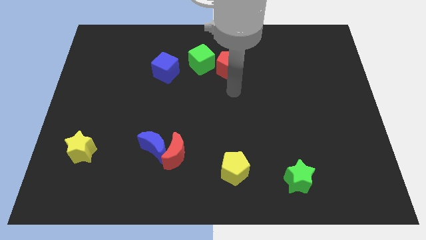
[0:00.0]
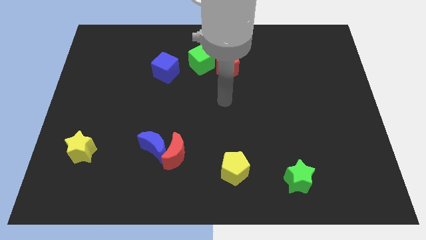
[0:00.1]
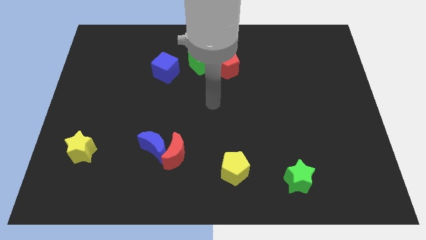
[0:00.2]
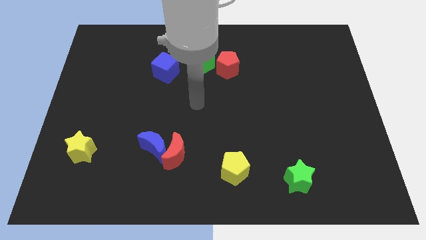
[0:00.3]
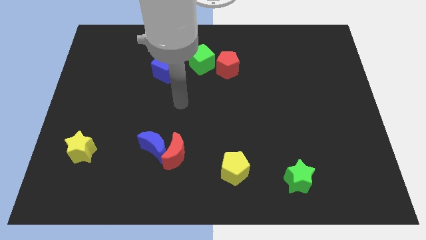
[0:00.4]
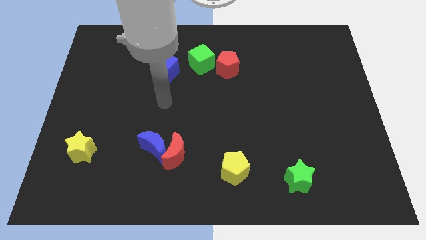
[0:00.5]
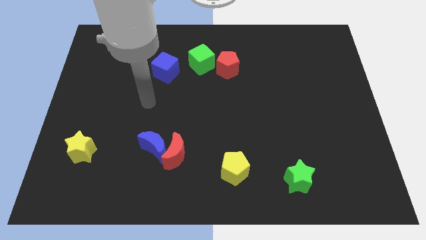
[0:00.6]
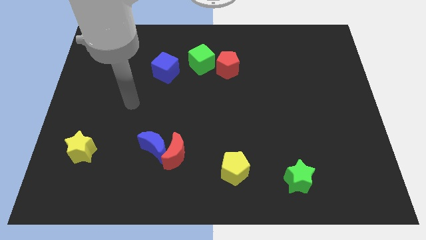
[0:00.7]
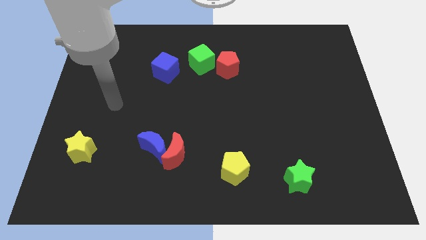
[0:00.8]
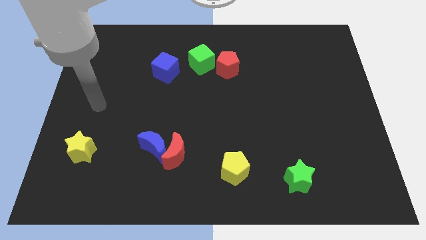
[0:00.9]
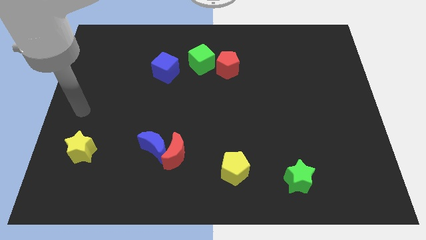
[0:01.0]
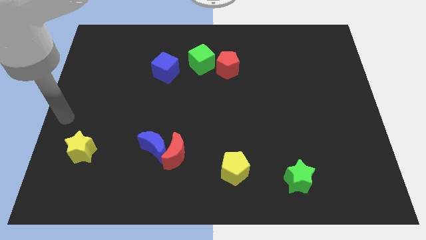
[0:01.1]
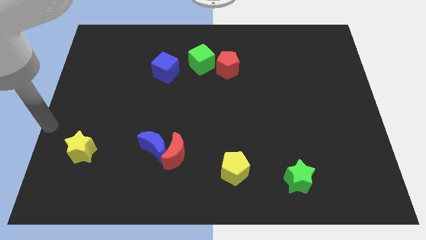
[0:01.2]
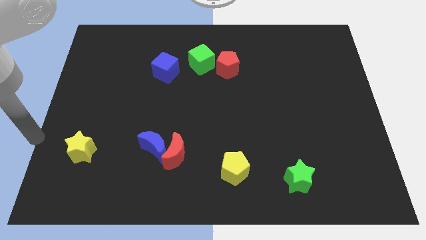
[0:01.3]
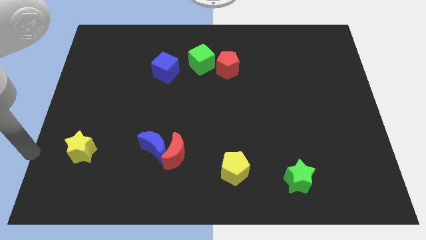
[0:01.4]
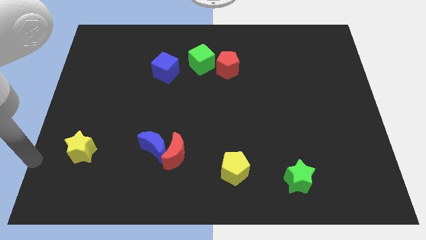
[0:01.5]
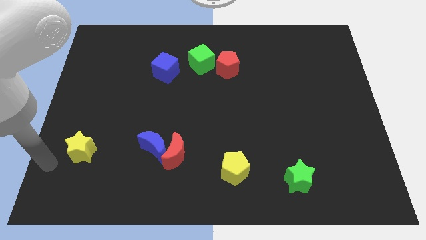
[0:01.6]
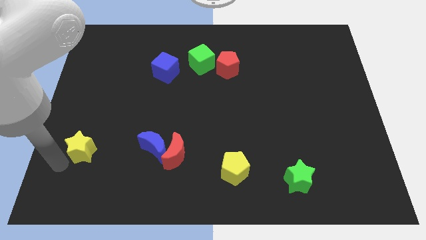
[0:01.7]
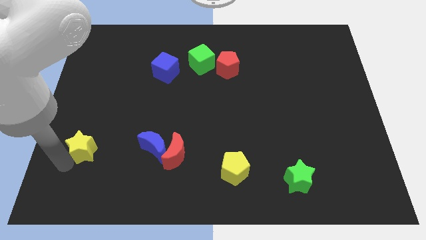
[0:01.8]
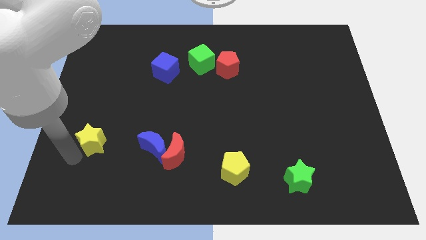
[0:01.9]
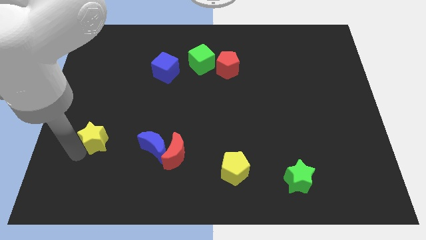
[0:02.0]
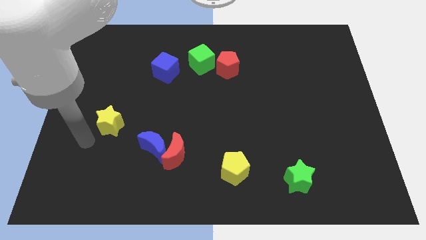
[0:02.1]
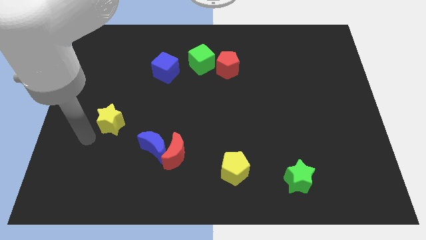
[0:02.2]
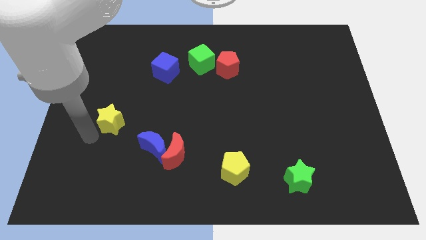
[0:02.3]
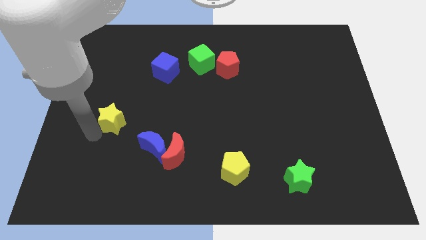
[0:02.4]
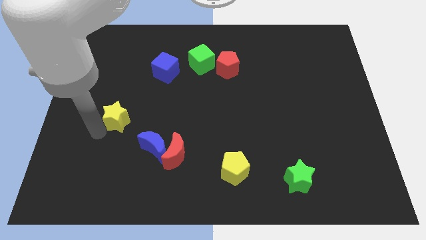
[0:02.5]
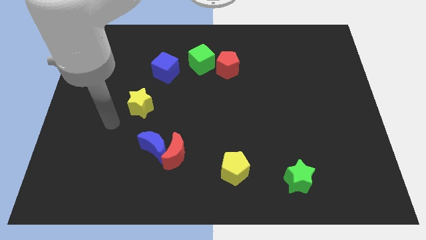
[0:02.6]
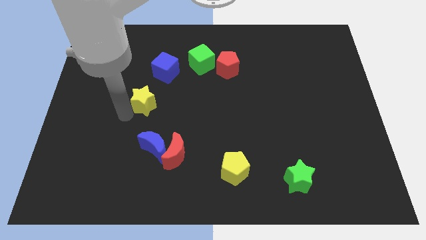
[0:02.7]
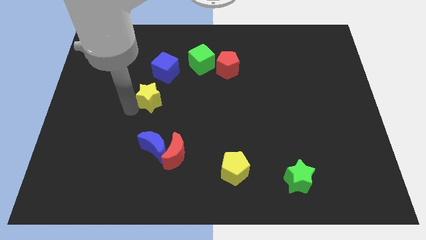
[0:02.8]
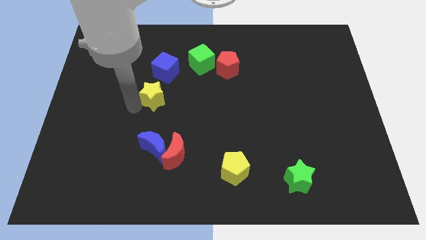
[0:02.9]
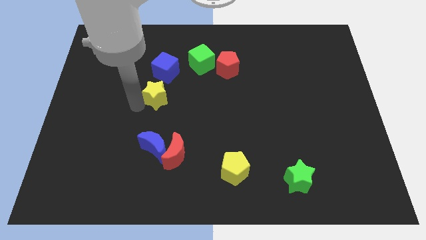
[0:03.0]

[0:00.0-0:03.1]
place the yellow star under the blue cube

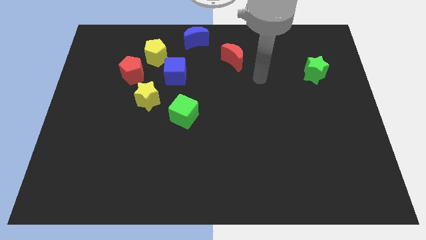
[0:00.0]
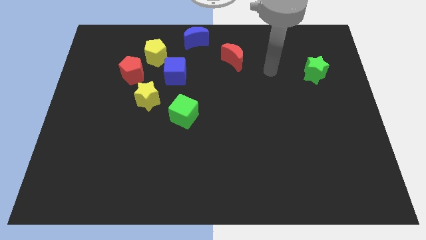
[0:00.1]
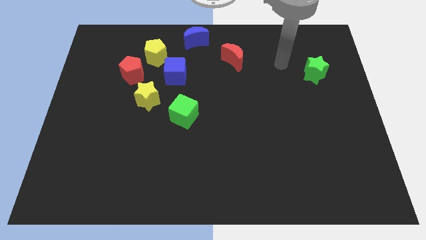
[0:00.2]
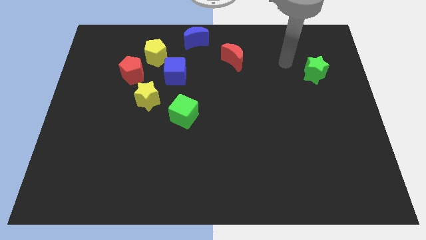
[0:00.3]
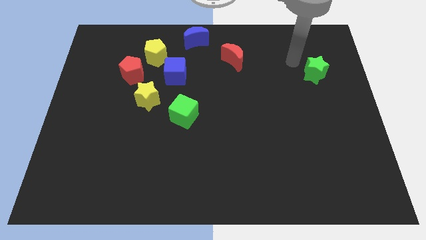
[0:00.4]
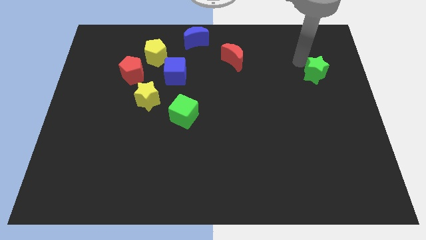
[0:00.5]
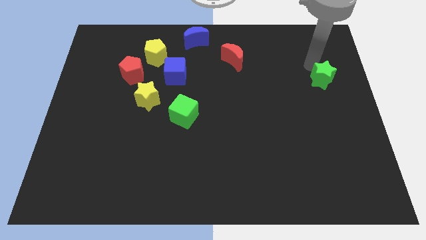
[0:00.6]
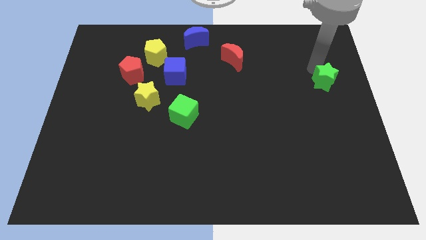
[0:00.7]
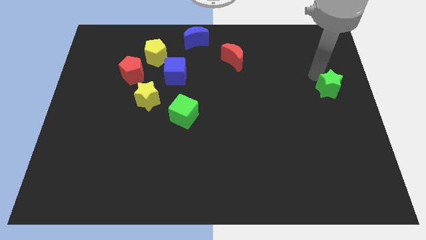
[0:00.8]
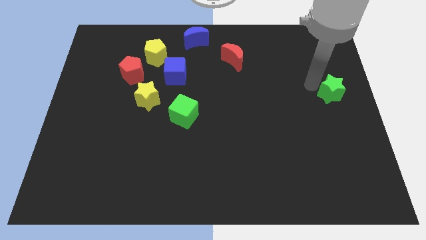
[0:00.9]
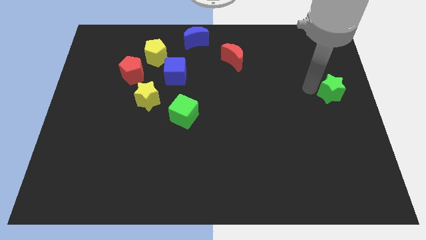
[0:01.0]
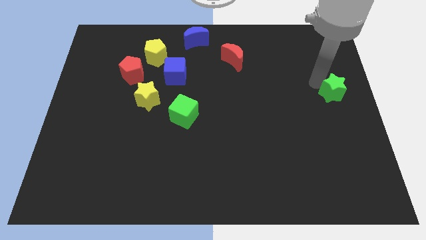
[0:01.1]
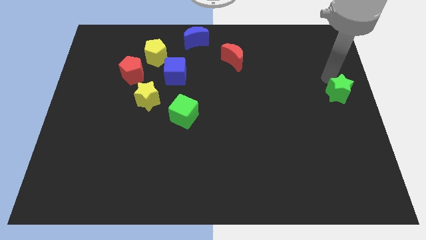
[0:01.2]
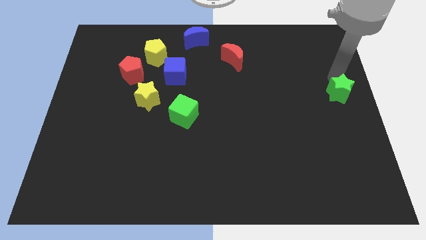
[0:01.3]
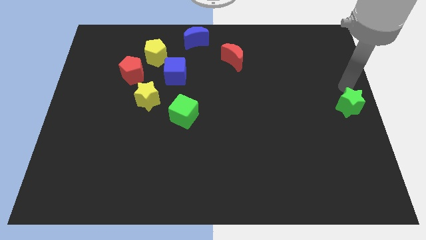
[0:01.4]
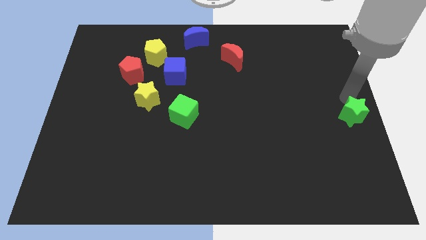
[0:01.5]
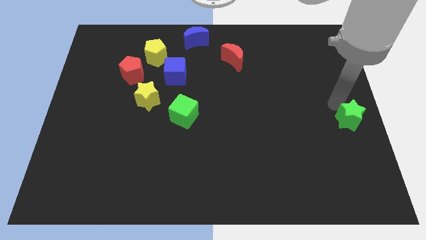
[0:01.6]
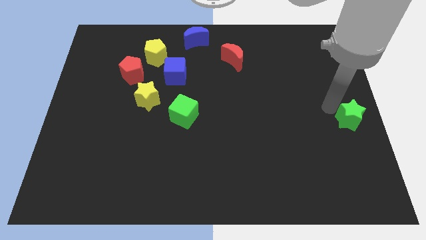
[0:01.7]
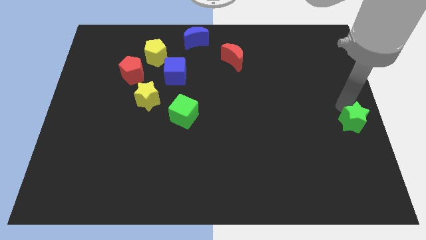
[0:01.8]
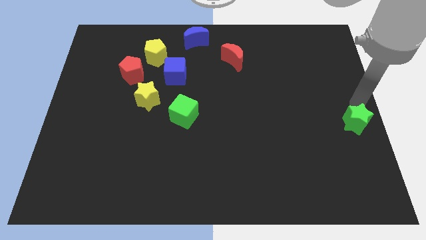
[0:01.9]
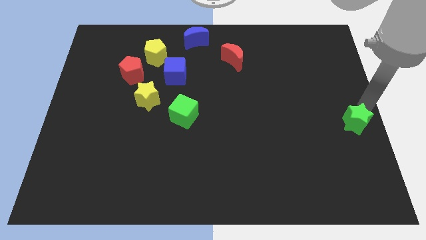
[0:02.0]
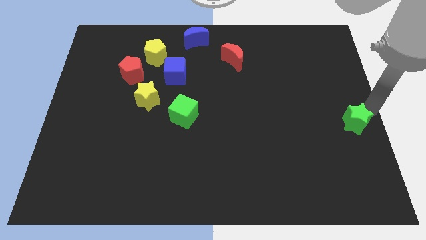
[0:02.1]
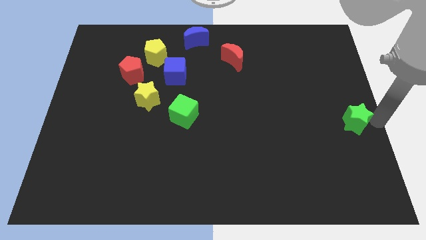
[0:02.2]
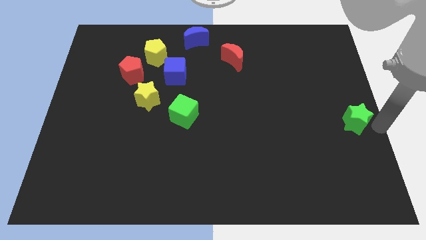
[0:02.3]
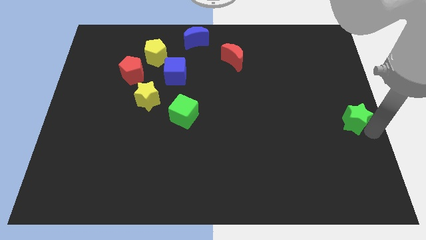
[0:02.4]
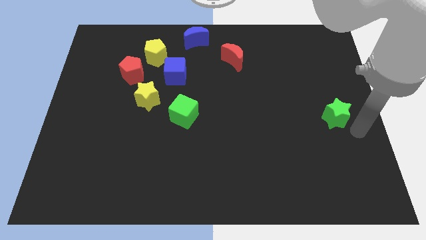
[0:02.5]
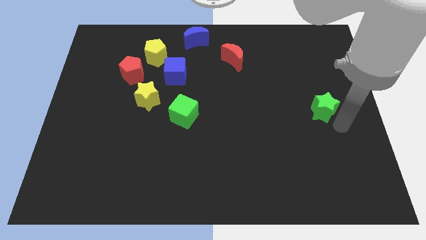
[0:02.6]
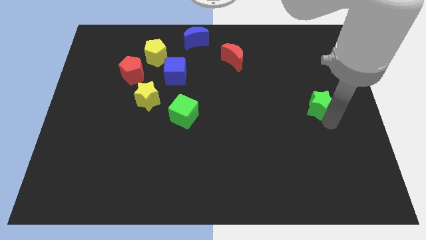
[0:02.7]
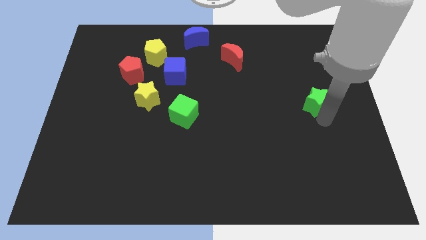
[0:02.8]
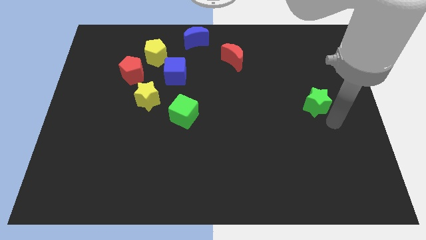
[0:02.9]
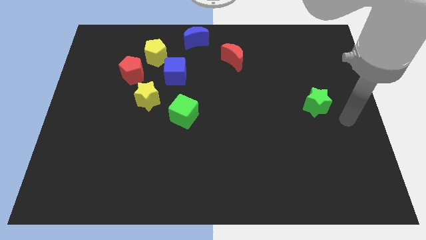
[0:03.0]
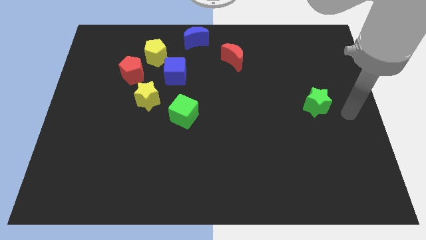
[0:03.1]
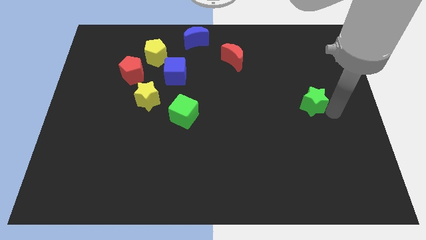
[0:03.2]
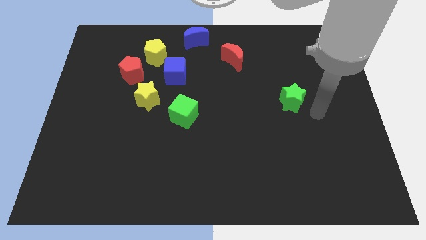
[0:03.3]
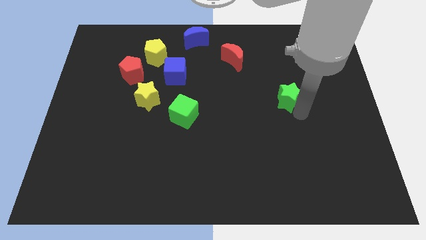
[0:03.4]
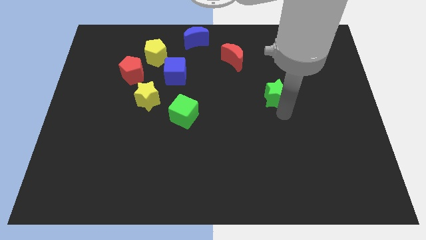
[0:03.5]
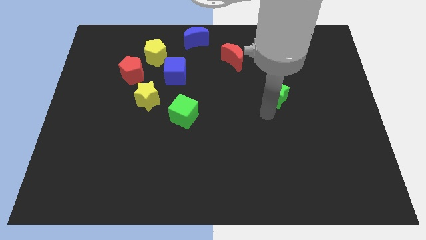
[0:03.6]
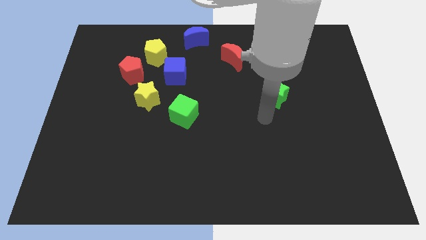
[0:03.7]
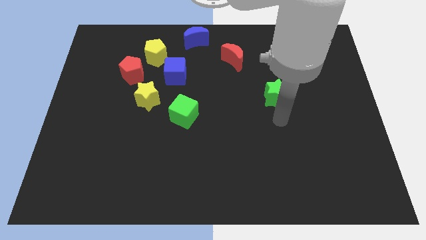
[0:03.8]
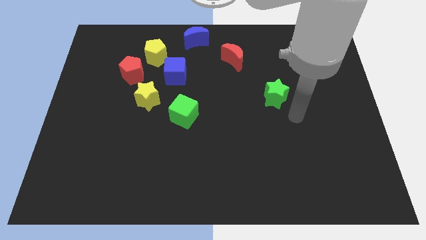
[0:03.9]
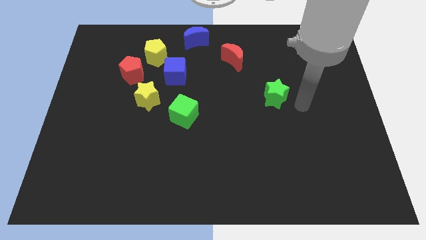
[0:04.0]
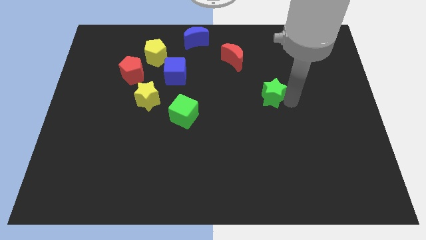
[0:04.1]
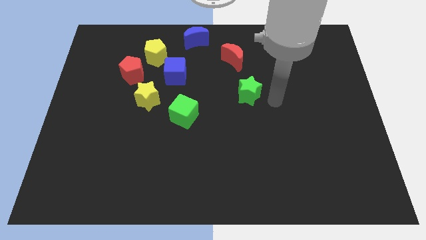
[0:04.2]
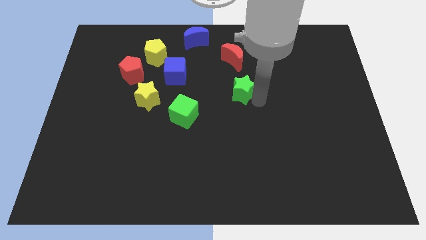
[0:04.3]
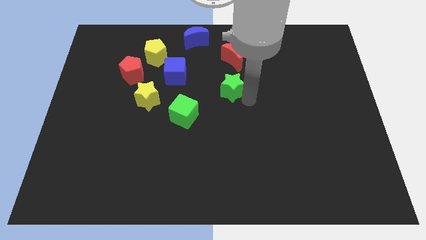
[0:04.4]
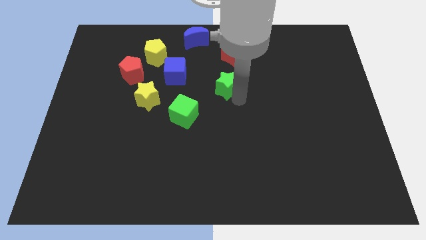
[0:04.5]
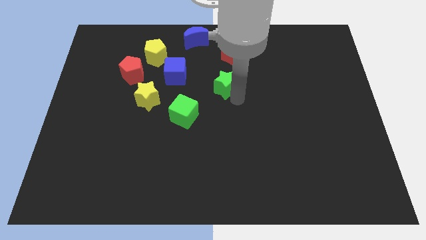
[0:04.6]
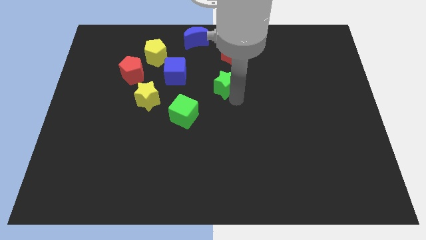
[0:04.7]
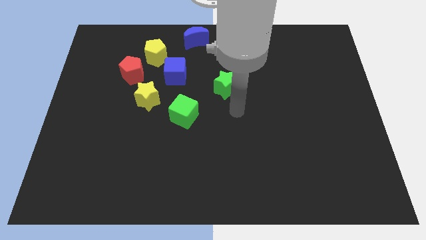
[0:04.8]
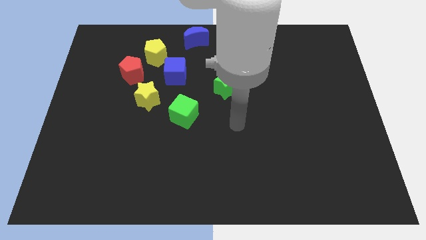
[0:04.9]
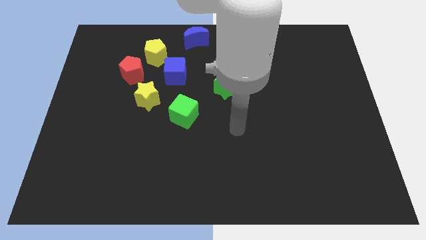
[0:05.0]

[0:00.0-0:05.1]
place the green star right to the blue cube

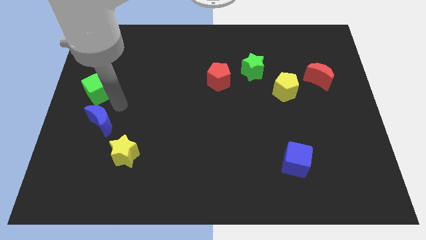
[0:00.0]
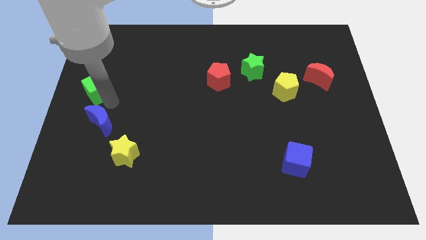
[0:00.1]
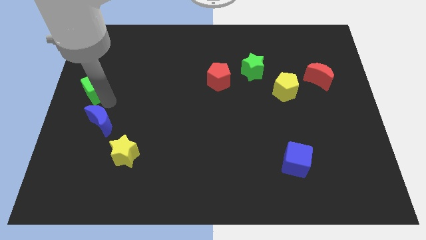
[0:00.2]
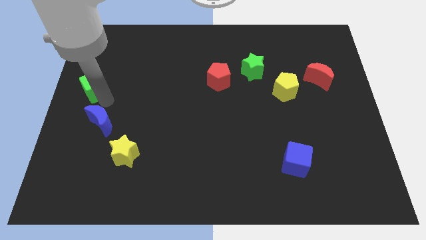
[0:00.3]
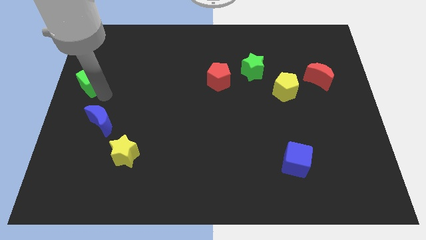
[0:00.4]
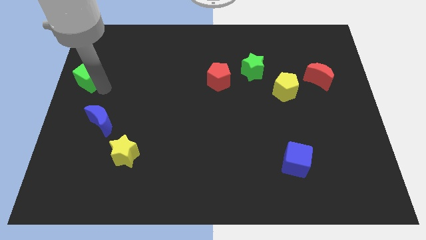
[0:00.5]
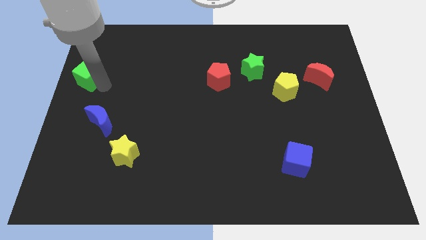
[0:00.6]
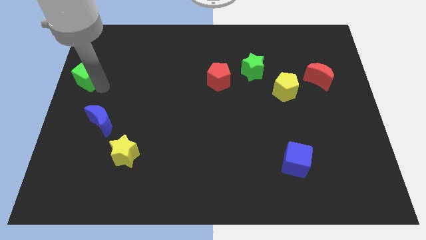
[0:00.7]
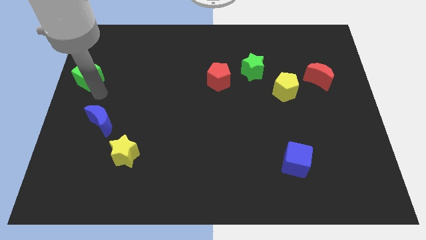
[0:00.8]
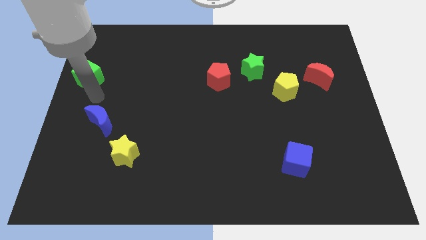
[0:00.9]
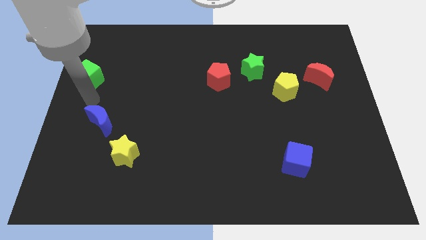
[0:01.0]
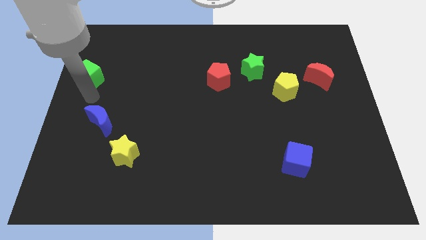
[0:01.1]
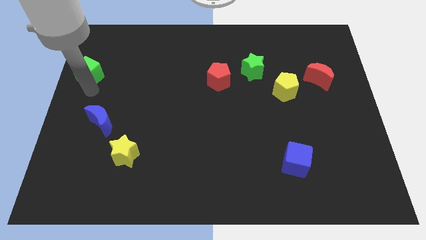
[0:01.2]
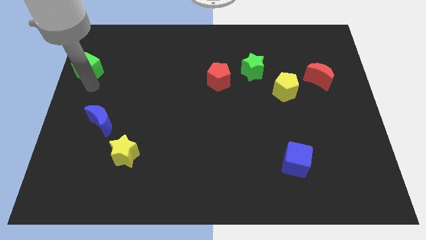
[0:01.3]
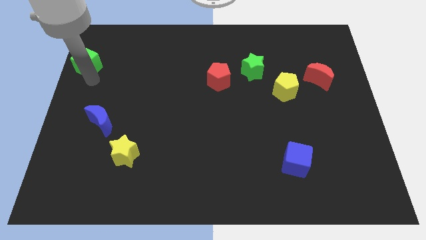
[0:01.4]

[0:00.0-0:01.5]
move the green cube away from the blue moon
